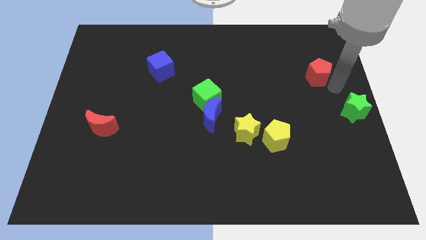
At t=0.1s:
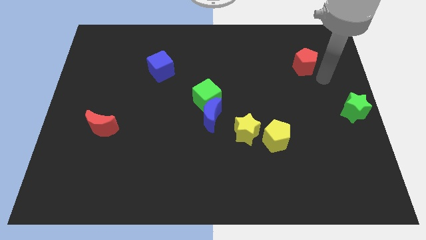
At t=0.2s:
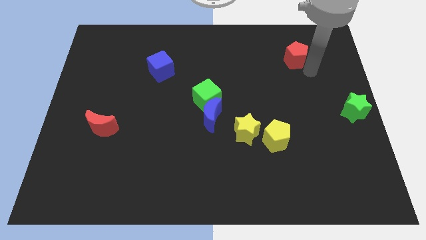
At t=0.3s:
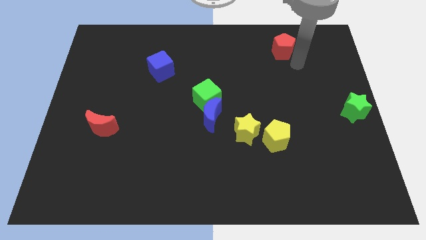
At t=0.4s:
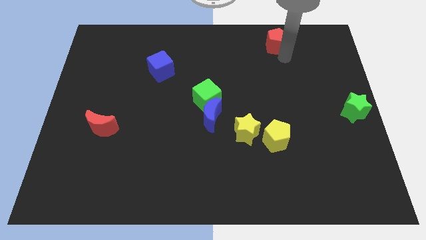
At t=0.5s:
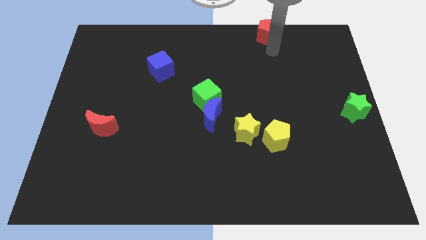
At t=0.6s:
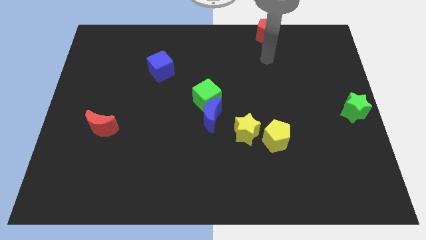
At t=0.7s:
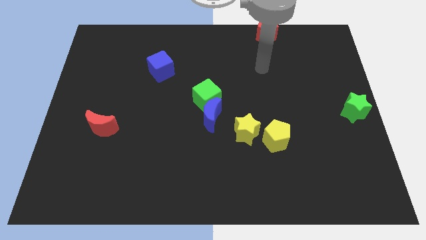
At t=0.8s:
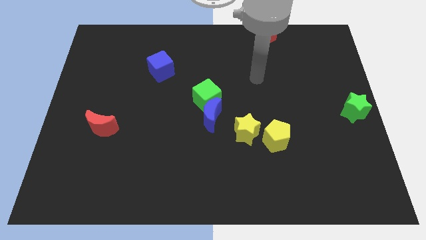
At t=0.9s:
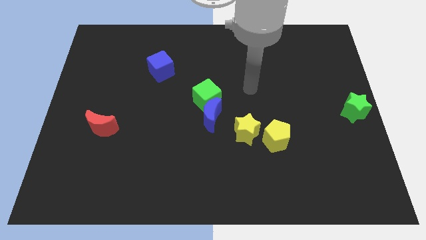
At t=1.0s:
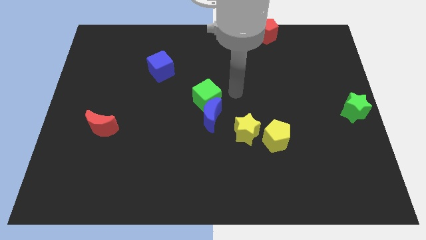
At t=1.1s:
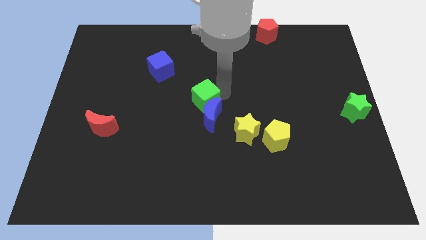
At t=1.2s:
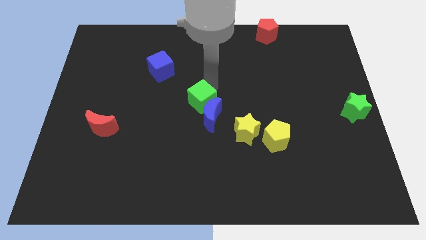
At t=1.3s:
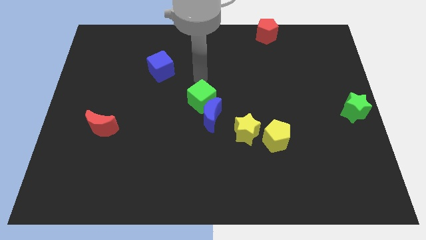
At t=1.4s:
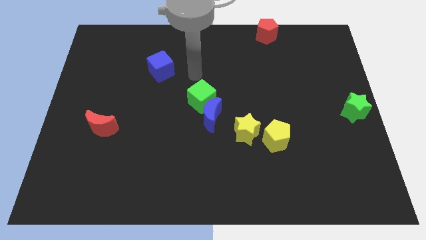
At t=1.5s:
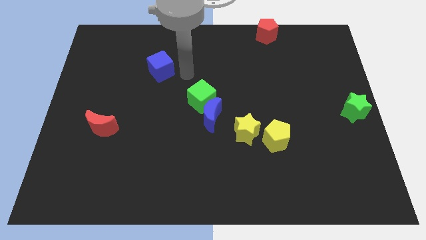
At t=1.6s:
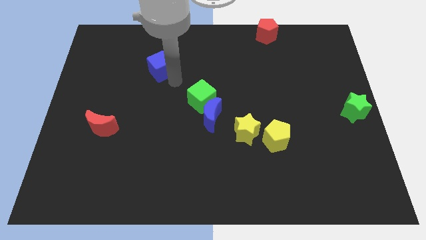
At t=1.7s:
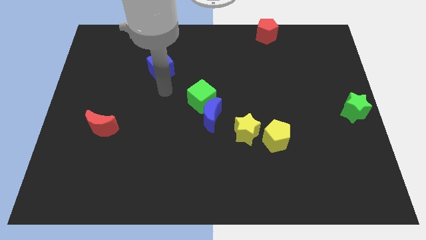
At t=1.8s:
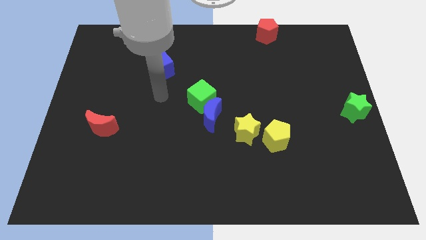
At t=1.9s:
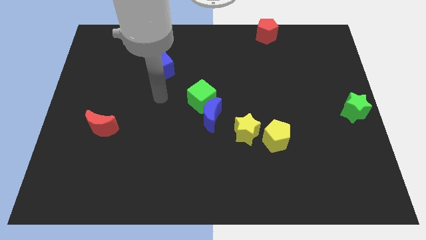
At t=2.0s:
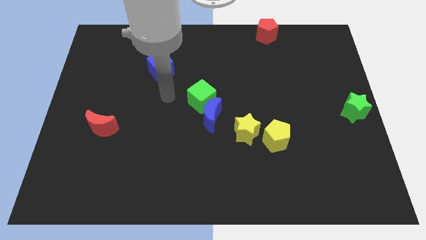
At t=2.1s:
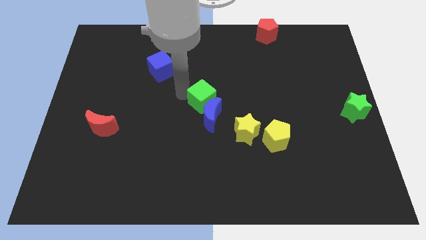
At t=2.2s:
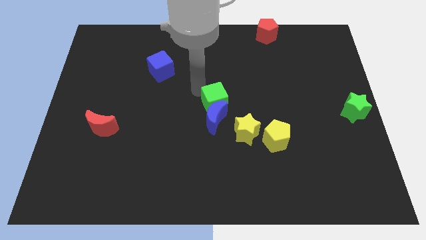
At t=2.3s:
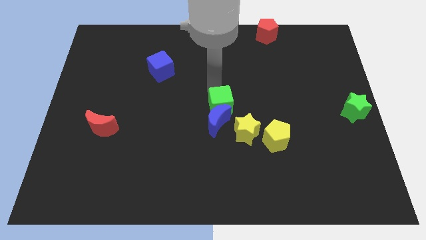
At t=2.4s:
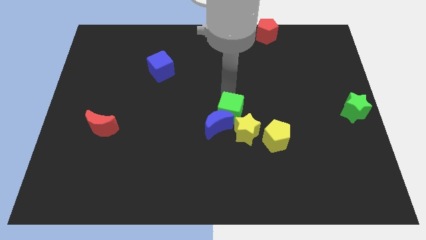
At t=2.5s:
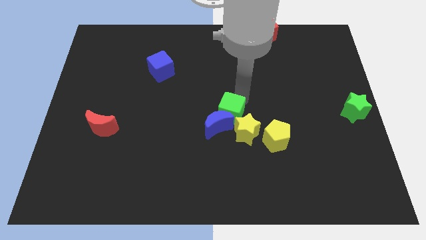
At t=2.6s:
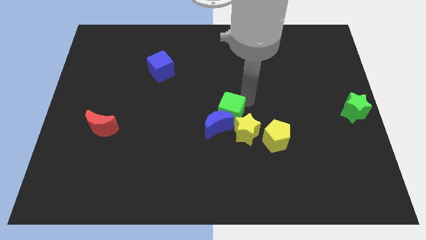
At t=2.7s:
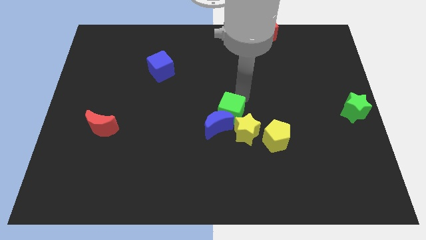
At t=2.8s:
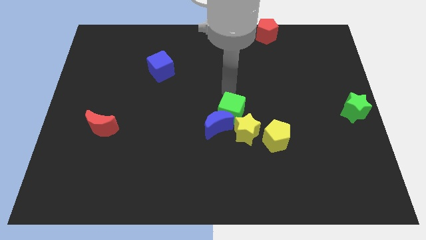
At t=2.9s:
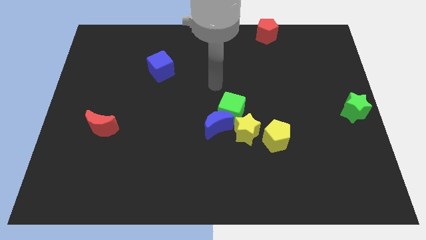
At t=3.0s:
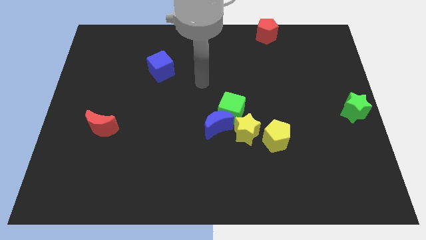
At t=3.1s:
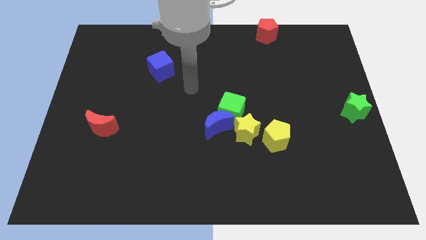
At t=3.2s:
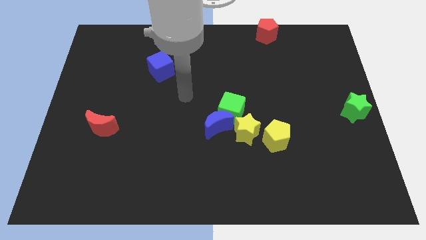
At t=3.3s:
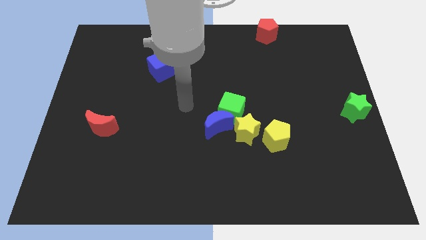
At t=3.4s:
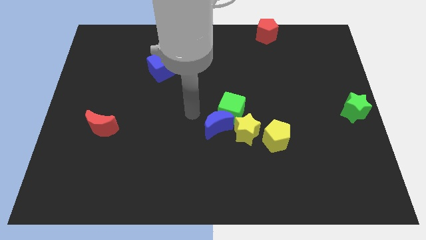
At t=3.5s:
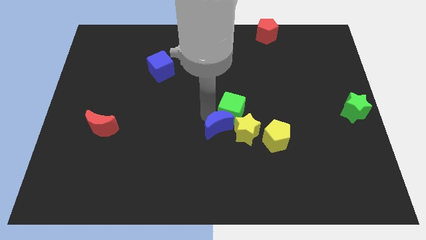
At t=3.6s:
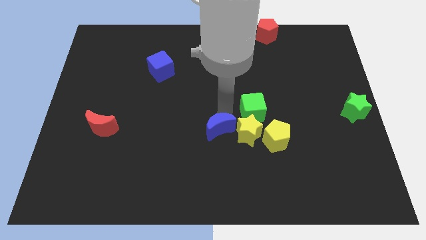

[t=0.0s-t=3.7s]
slide the green cube to the top of the yellow star

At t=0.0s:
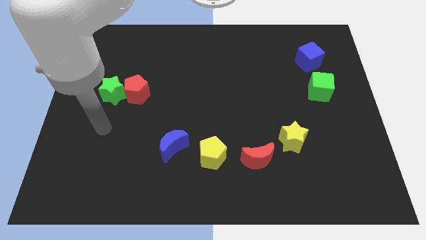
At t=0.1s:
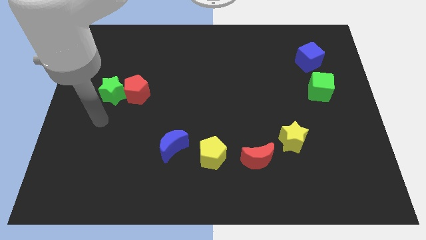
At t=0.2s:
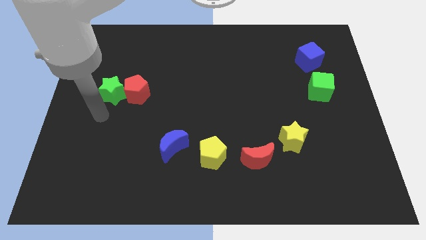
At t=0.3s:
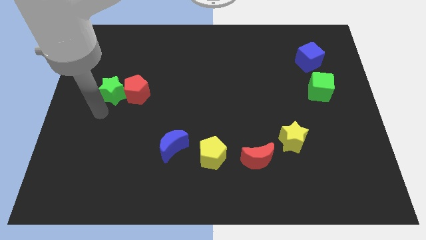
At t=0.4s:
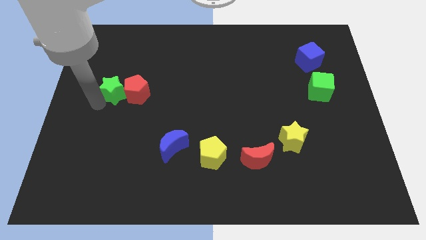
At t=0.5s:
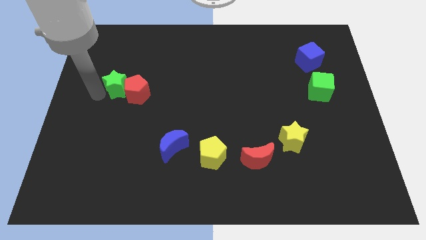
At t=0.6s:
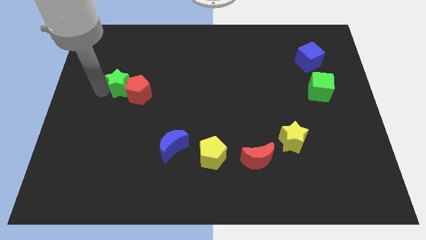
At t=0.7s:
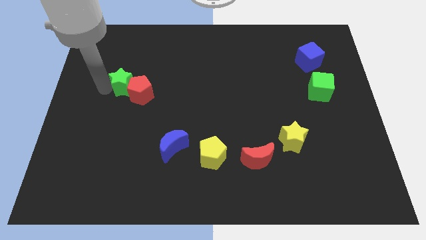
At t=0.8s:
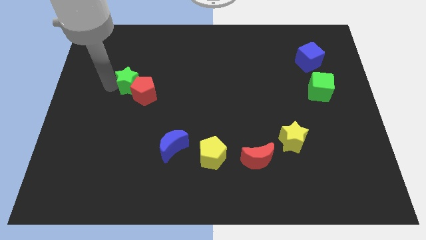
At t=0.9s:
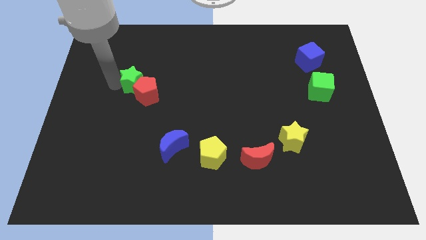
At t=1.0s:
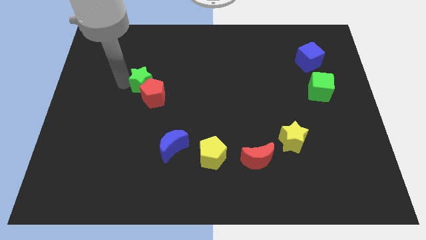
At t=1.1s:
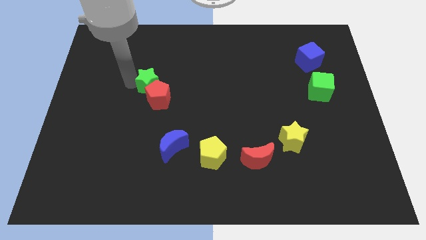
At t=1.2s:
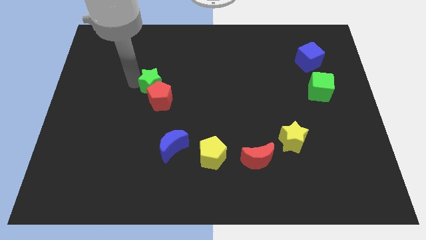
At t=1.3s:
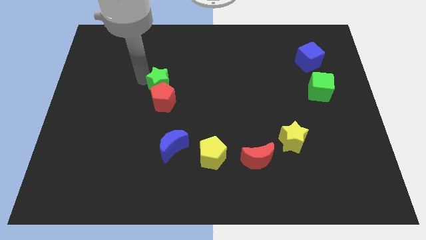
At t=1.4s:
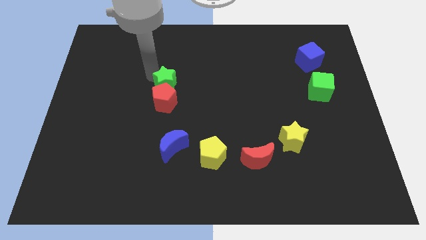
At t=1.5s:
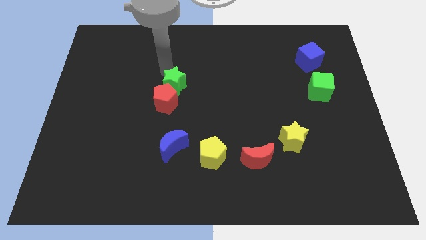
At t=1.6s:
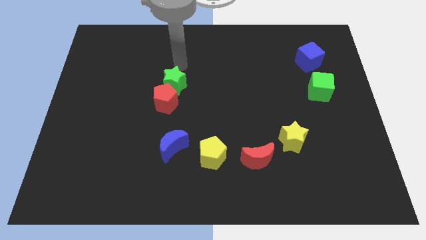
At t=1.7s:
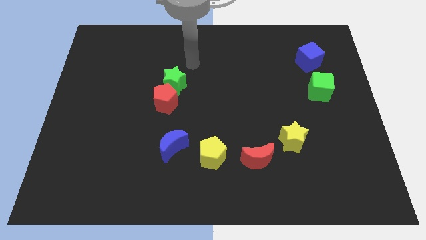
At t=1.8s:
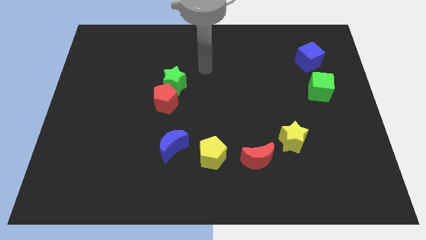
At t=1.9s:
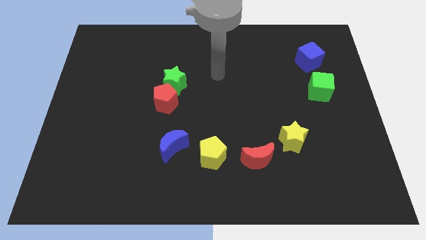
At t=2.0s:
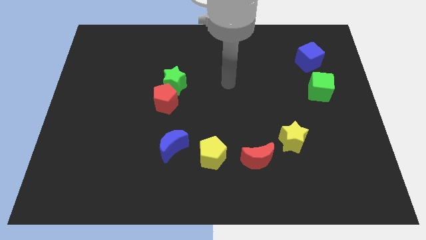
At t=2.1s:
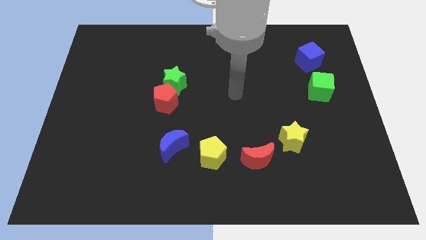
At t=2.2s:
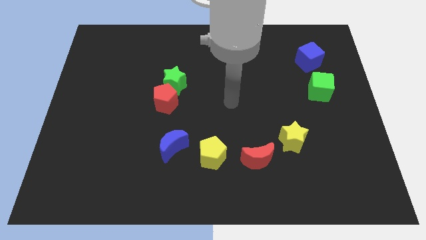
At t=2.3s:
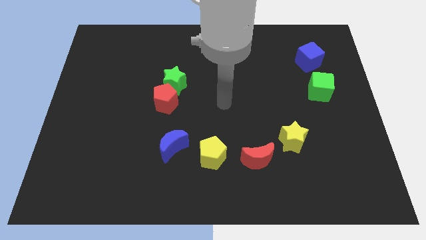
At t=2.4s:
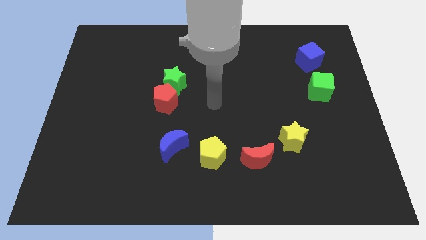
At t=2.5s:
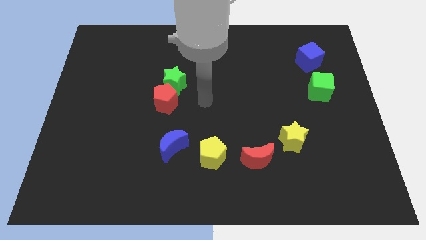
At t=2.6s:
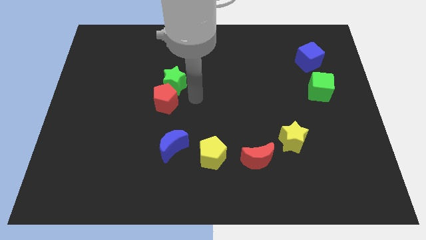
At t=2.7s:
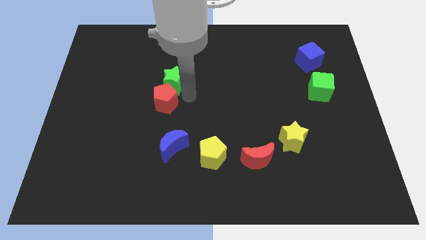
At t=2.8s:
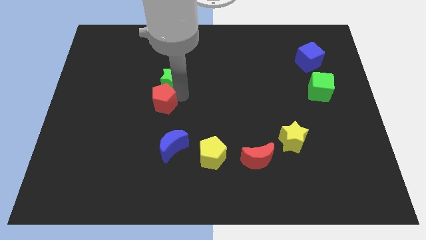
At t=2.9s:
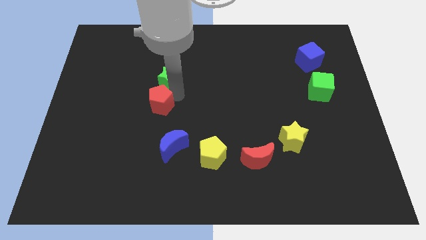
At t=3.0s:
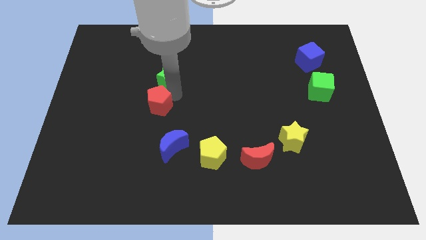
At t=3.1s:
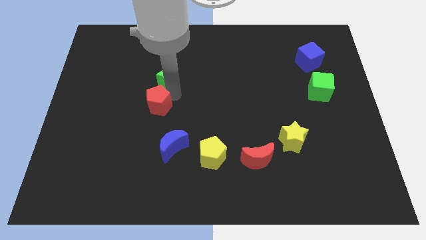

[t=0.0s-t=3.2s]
separate red pentagon and green star

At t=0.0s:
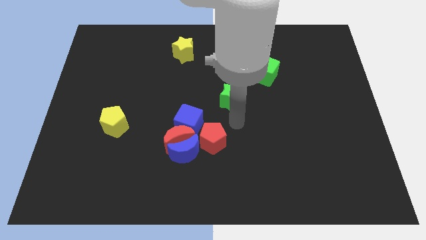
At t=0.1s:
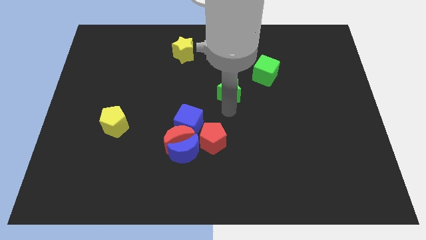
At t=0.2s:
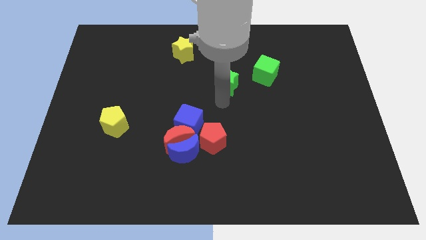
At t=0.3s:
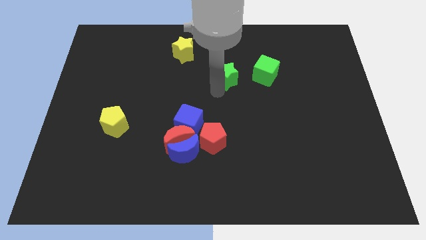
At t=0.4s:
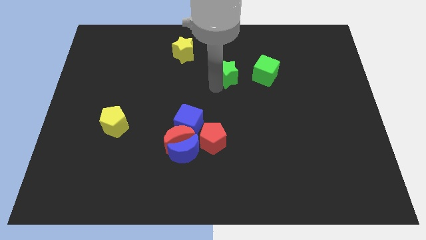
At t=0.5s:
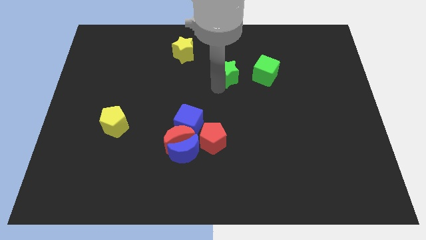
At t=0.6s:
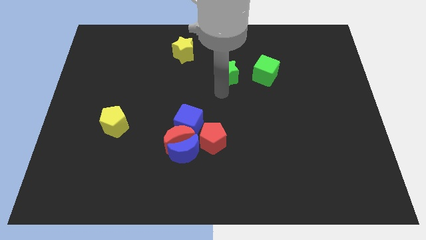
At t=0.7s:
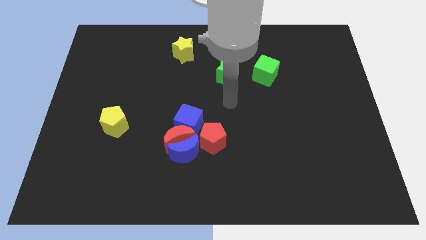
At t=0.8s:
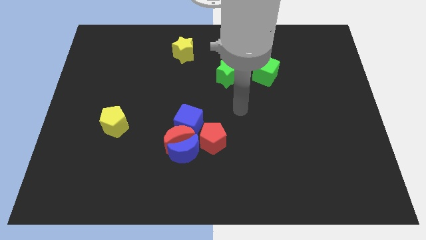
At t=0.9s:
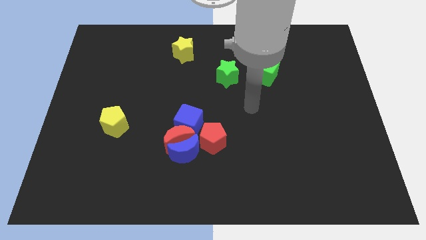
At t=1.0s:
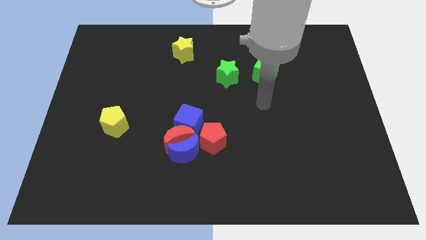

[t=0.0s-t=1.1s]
push the green star left to the green cube

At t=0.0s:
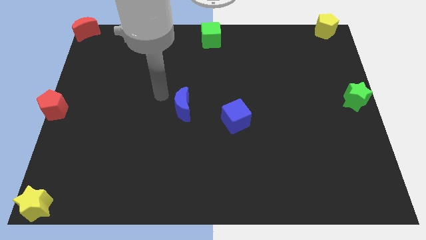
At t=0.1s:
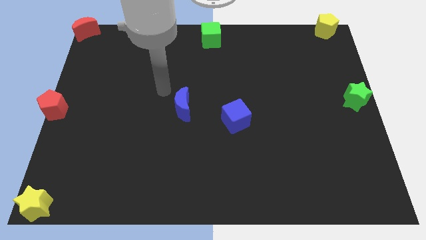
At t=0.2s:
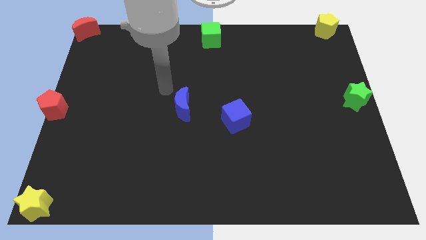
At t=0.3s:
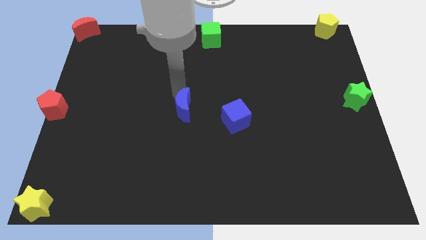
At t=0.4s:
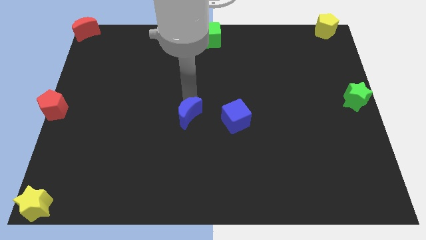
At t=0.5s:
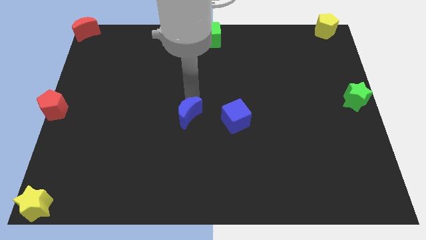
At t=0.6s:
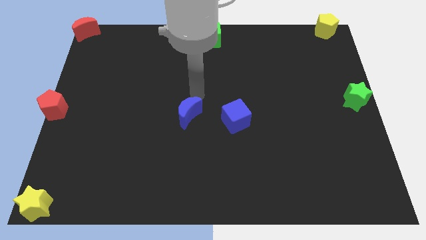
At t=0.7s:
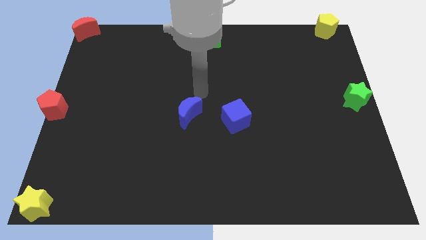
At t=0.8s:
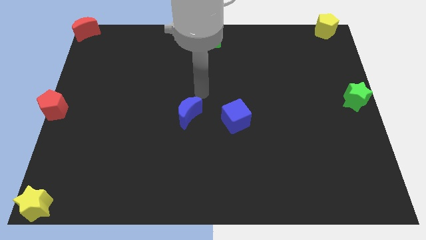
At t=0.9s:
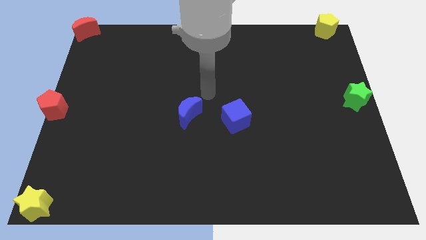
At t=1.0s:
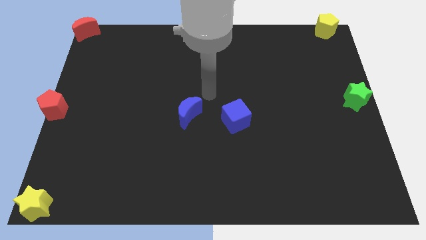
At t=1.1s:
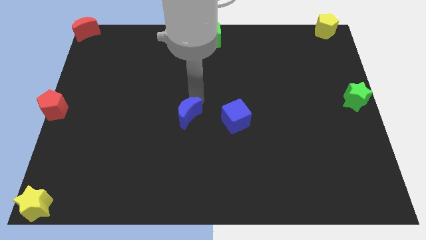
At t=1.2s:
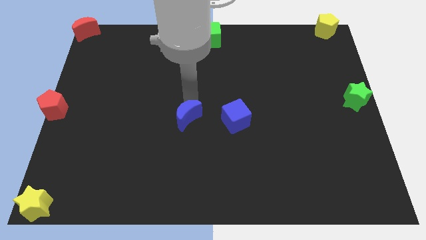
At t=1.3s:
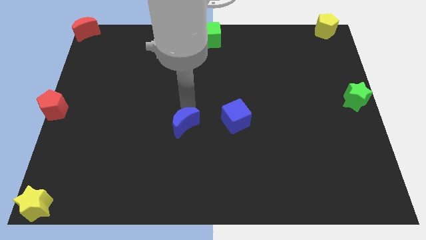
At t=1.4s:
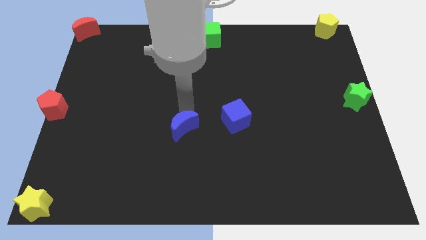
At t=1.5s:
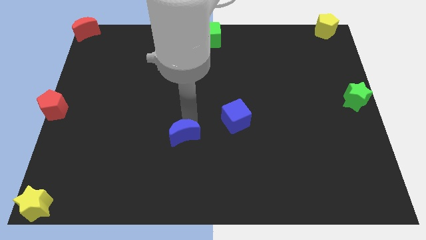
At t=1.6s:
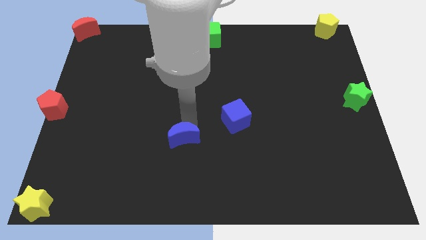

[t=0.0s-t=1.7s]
move blue moon slightly down
